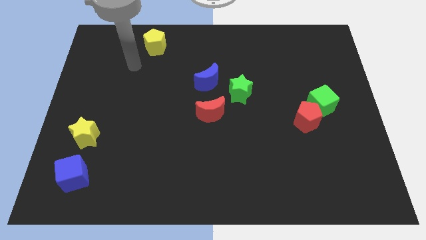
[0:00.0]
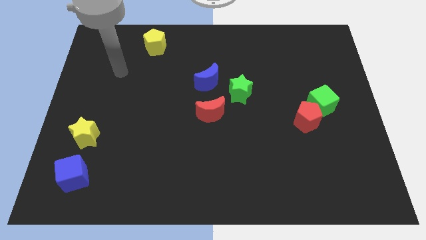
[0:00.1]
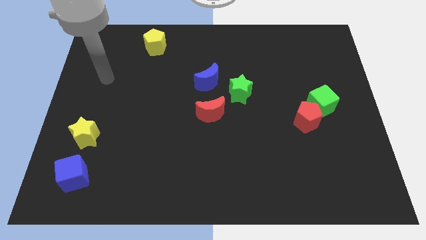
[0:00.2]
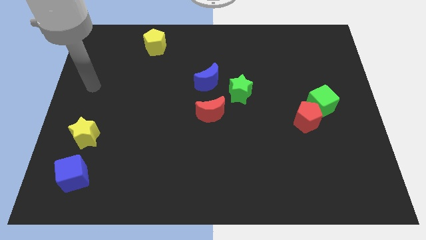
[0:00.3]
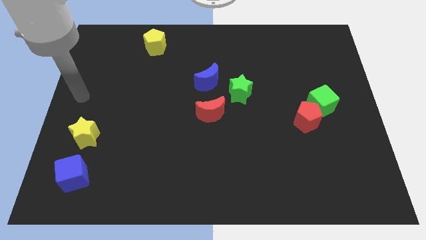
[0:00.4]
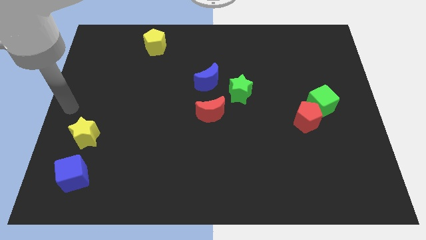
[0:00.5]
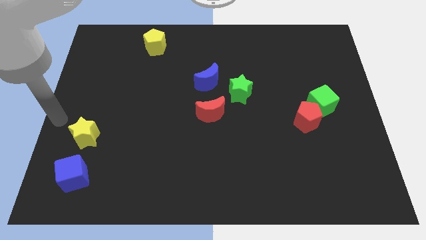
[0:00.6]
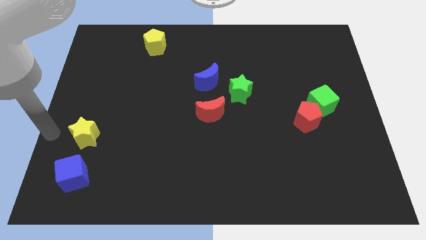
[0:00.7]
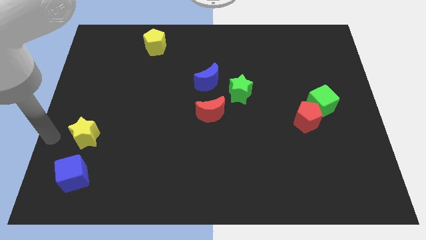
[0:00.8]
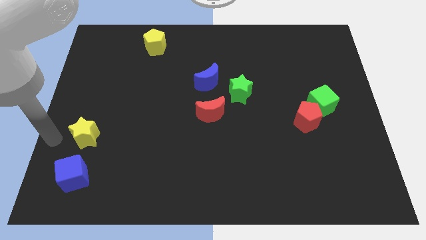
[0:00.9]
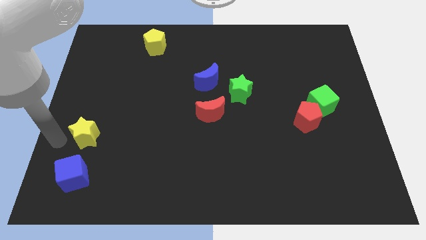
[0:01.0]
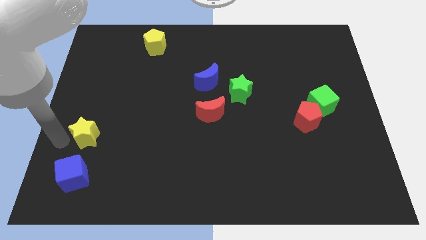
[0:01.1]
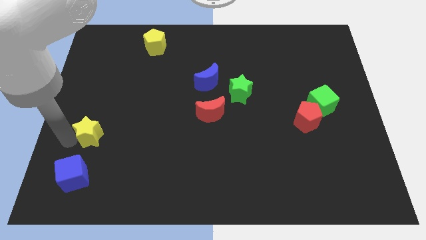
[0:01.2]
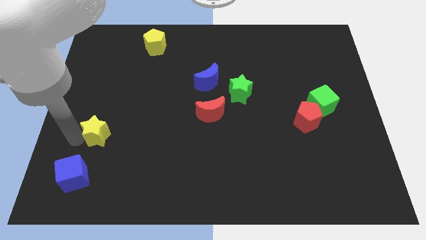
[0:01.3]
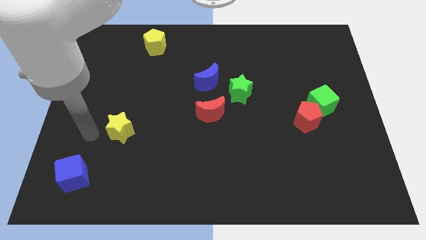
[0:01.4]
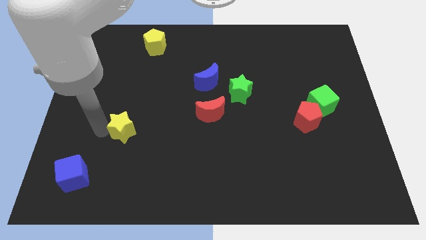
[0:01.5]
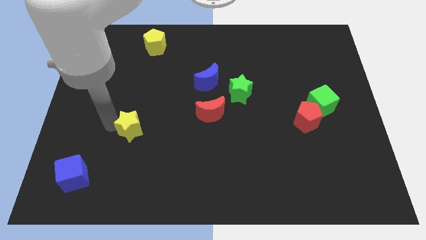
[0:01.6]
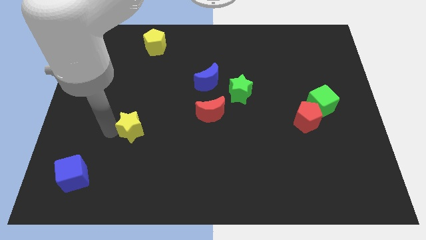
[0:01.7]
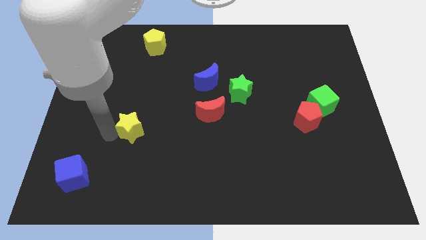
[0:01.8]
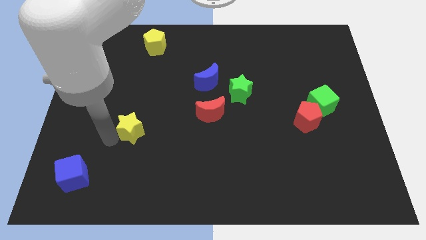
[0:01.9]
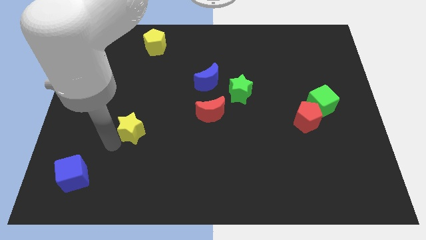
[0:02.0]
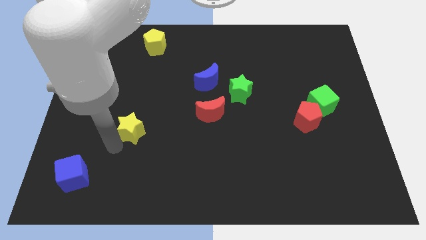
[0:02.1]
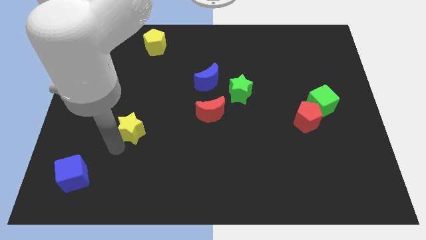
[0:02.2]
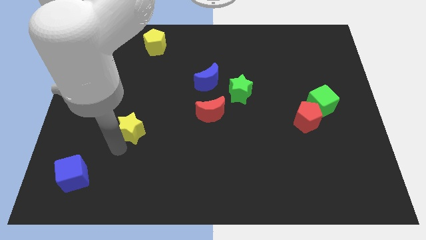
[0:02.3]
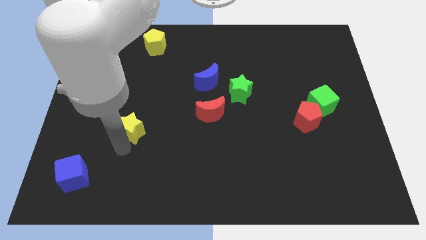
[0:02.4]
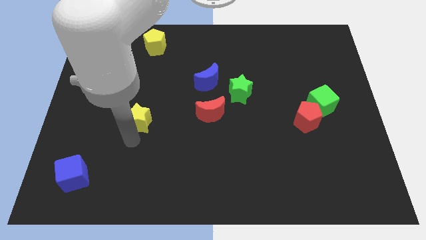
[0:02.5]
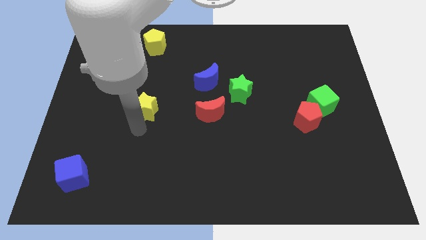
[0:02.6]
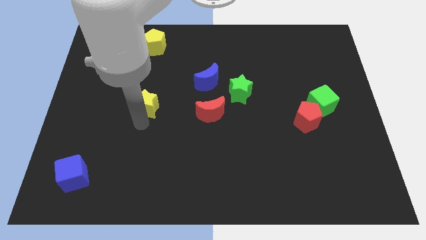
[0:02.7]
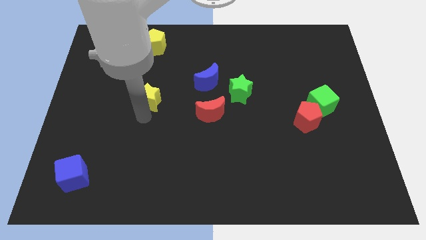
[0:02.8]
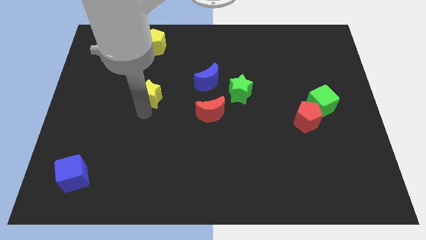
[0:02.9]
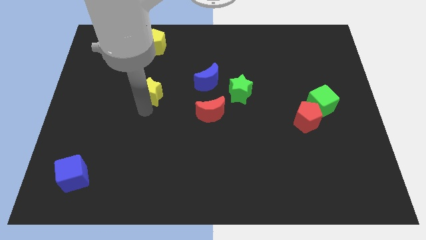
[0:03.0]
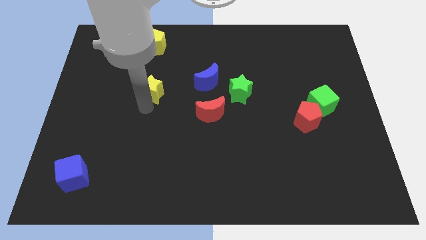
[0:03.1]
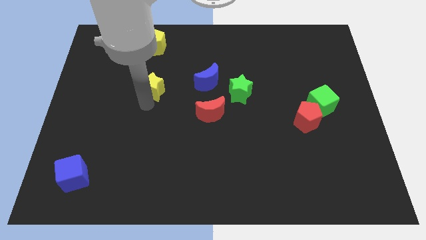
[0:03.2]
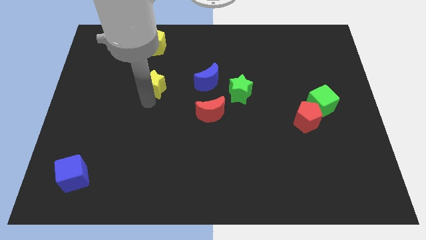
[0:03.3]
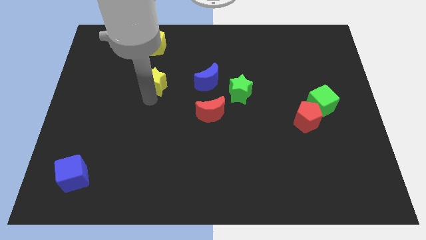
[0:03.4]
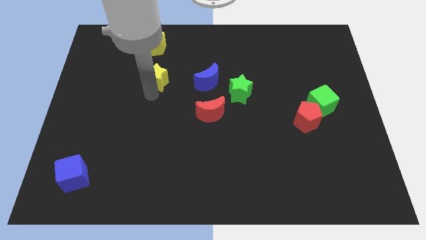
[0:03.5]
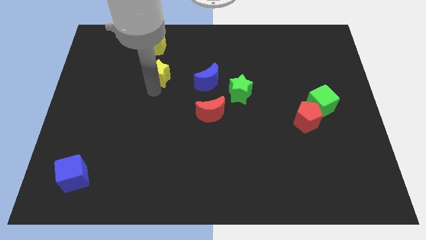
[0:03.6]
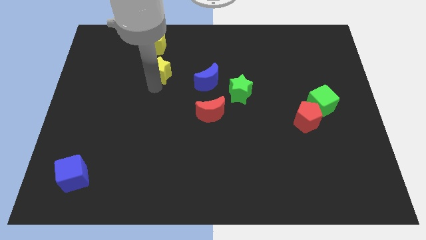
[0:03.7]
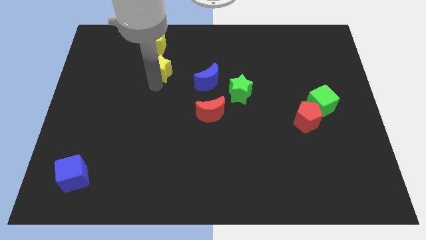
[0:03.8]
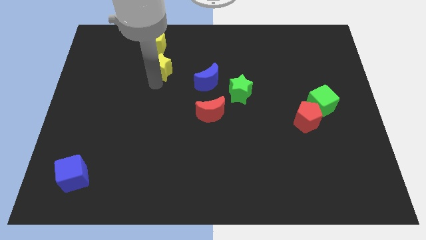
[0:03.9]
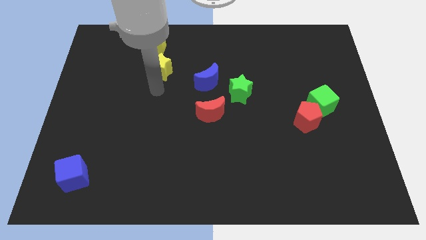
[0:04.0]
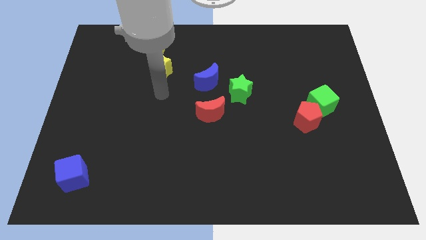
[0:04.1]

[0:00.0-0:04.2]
place the yellow star below the yellow pentagon

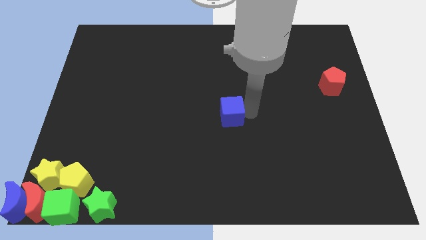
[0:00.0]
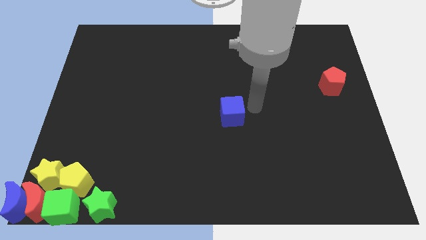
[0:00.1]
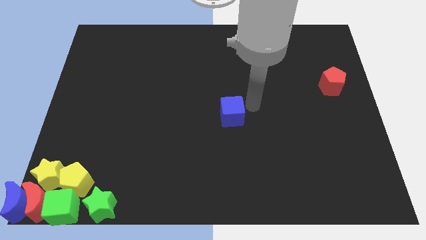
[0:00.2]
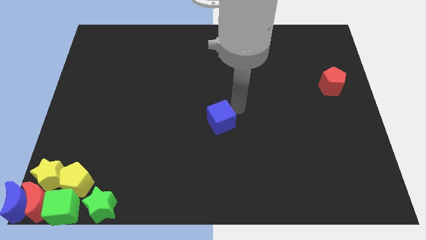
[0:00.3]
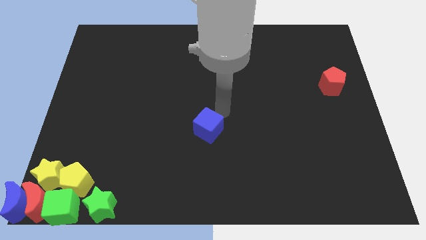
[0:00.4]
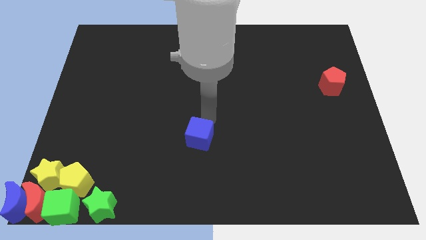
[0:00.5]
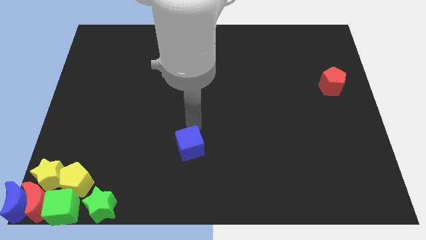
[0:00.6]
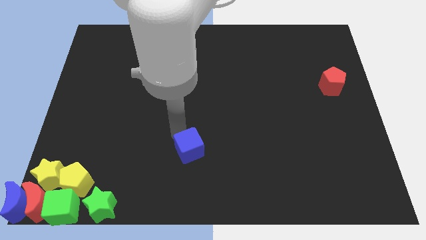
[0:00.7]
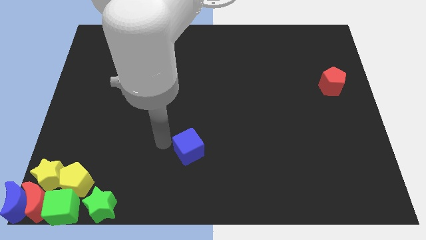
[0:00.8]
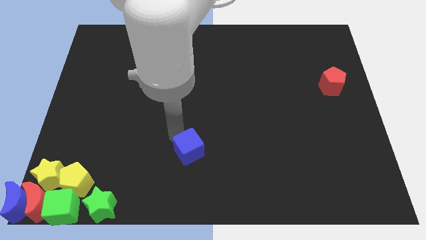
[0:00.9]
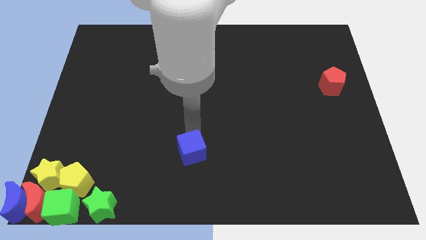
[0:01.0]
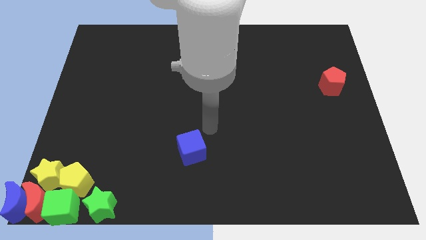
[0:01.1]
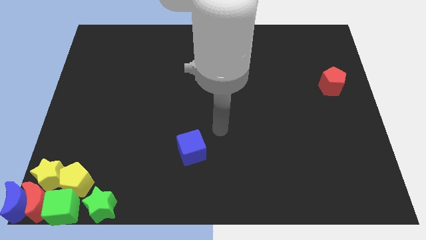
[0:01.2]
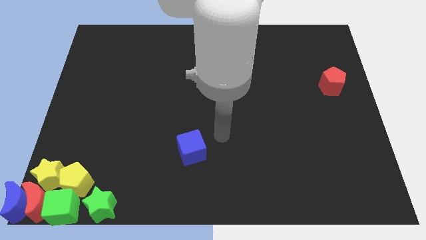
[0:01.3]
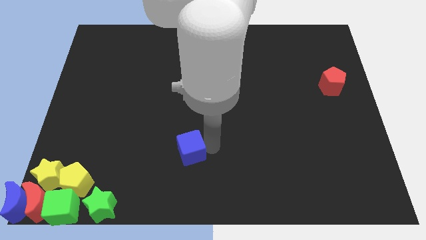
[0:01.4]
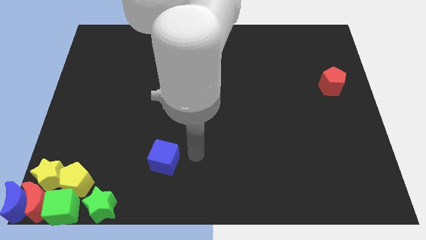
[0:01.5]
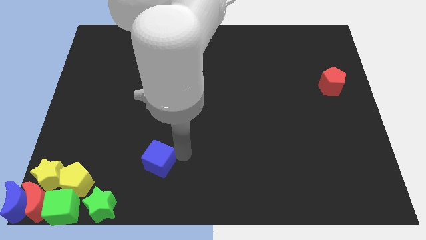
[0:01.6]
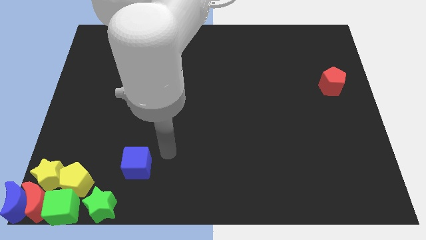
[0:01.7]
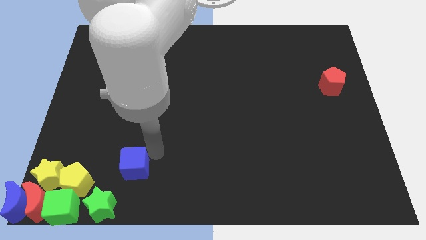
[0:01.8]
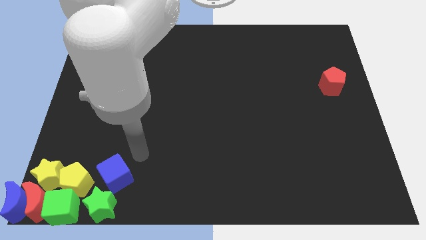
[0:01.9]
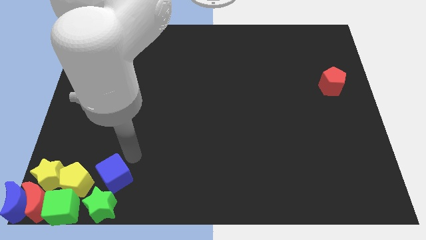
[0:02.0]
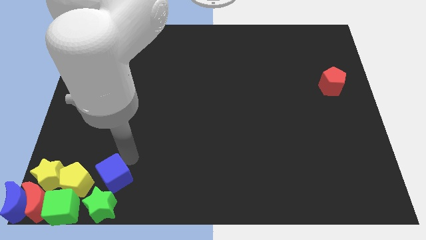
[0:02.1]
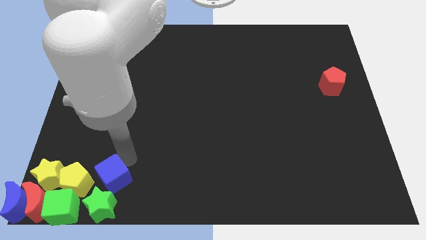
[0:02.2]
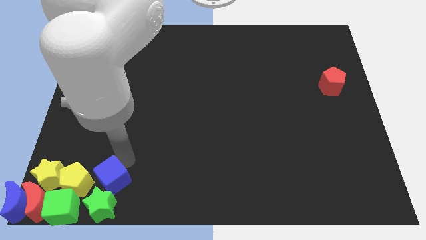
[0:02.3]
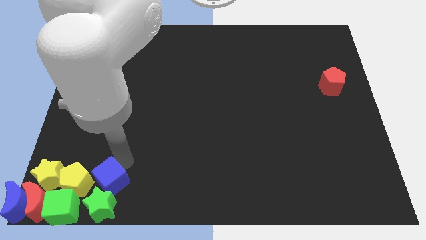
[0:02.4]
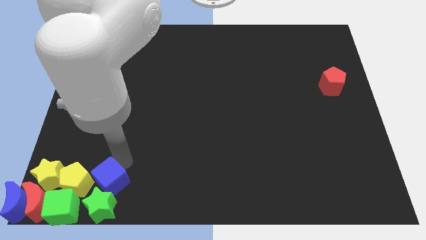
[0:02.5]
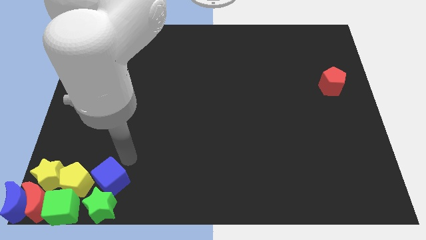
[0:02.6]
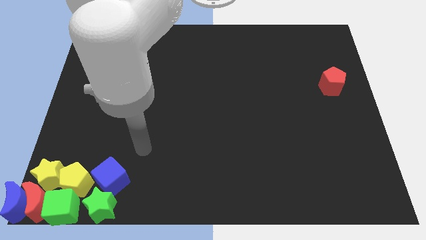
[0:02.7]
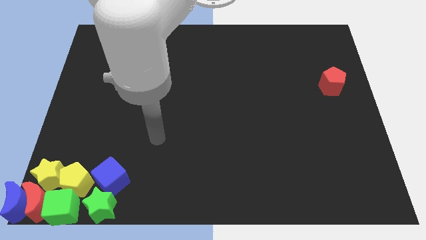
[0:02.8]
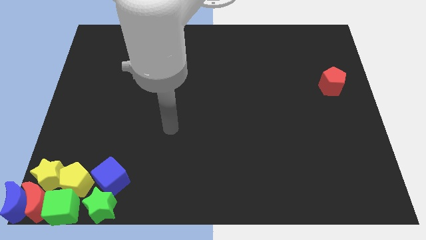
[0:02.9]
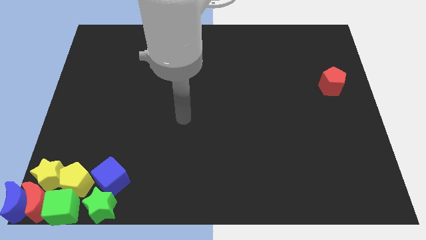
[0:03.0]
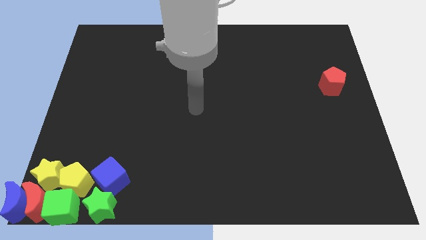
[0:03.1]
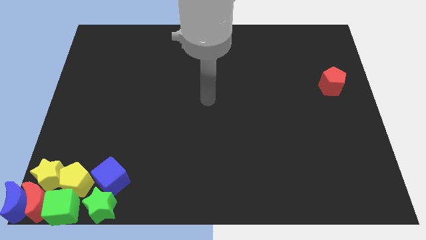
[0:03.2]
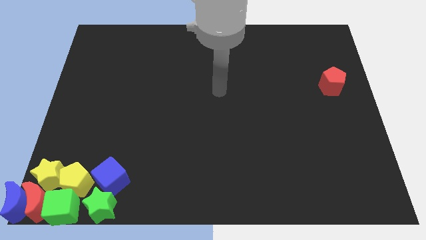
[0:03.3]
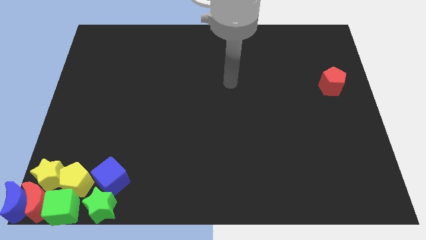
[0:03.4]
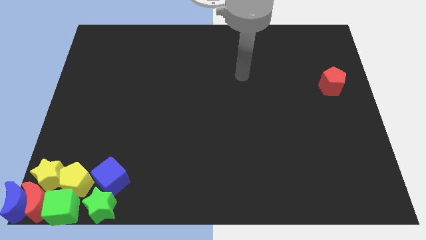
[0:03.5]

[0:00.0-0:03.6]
place the blue cube into a group of blocks

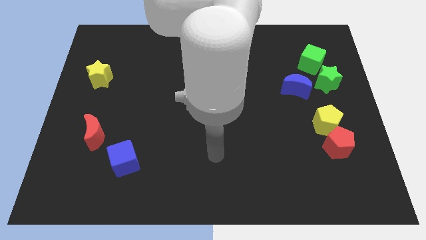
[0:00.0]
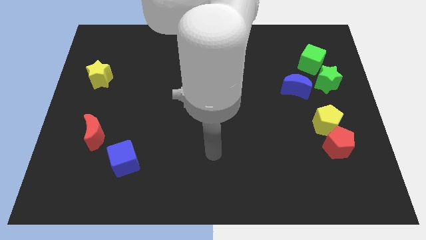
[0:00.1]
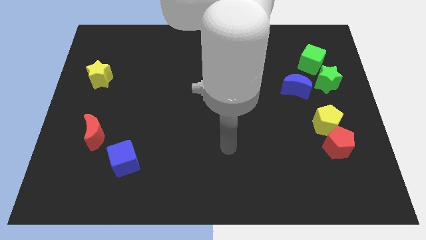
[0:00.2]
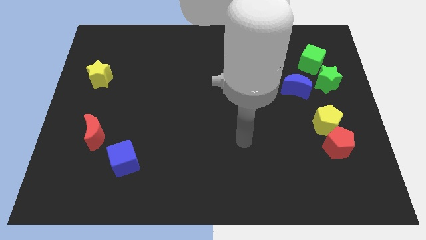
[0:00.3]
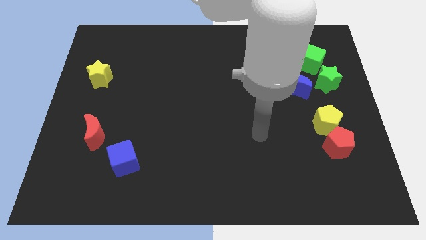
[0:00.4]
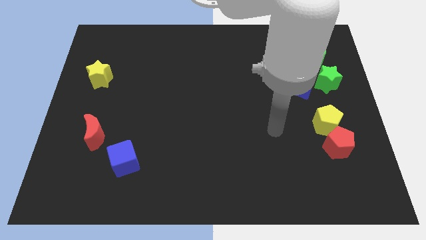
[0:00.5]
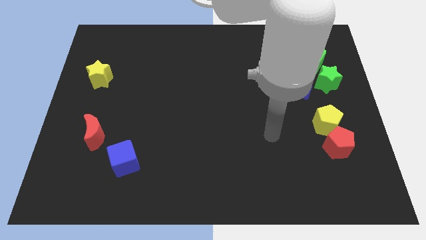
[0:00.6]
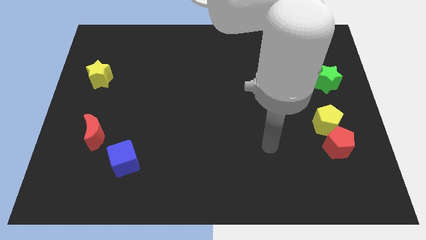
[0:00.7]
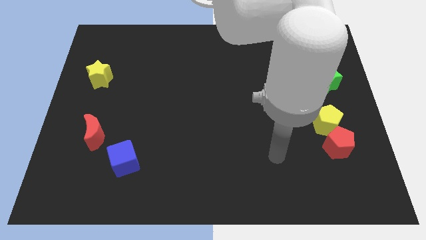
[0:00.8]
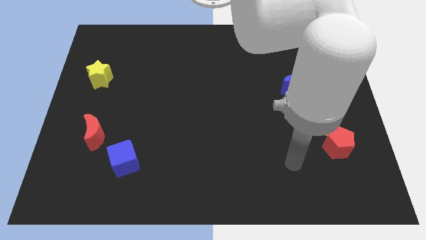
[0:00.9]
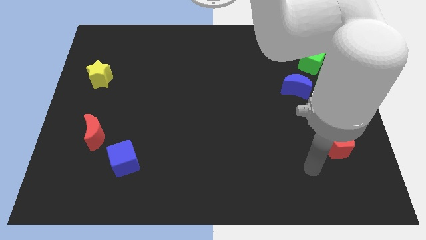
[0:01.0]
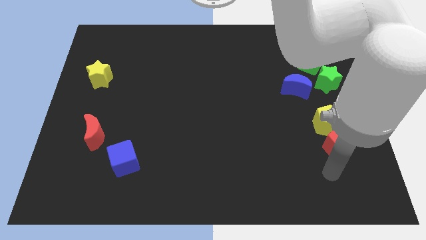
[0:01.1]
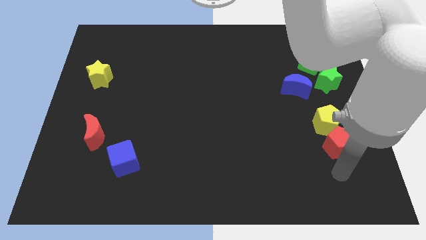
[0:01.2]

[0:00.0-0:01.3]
place arm on the bottom of red pentagon
